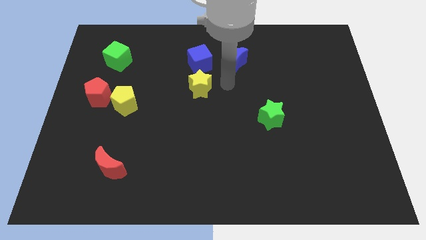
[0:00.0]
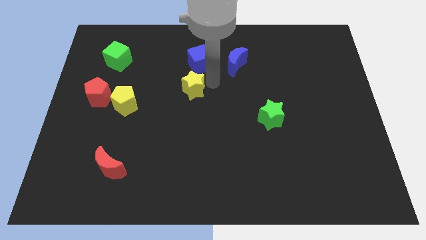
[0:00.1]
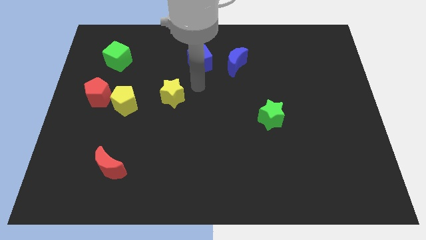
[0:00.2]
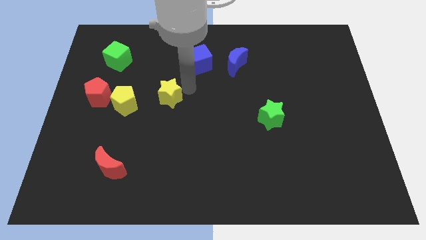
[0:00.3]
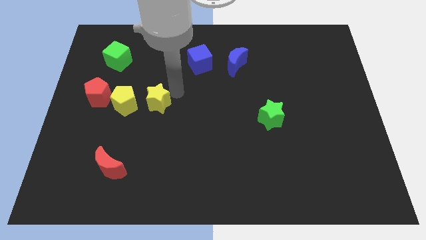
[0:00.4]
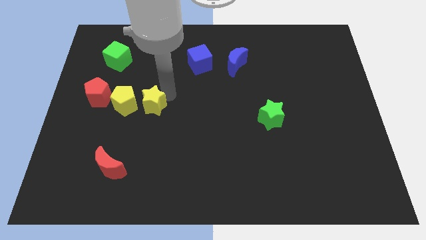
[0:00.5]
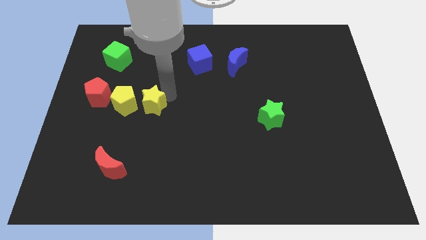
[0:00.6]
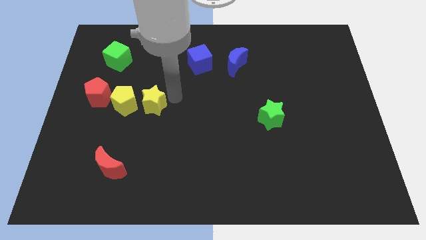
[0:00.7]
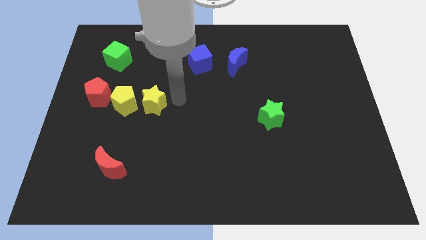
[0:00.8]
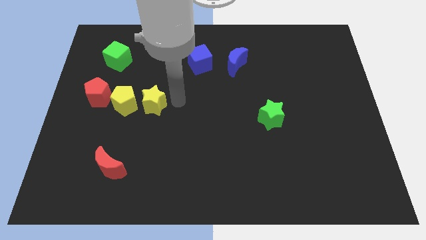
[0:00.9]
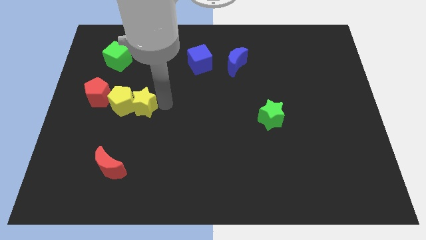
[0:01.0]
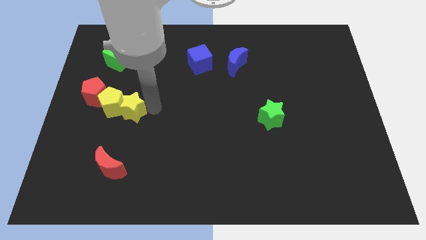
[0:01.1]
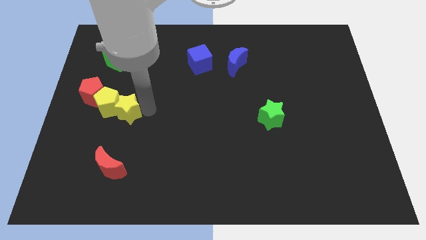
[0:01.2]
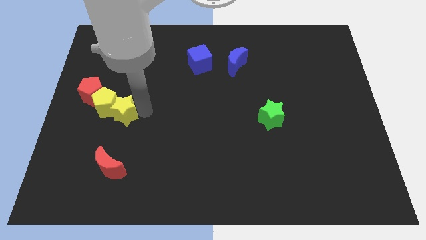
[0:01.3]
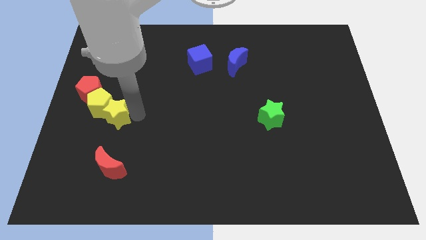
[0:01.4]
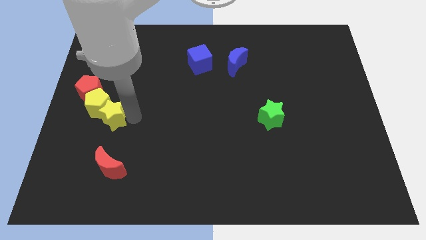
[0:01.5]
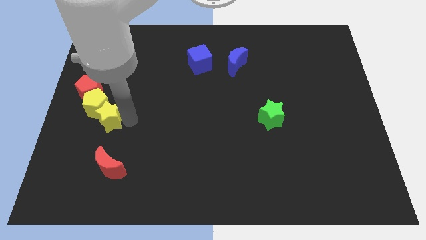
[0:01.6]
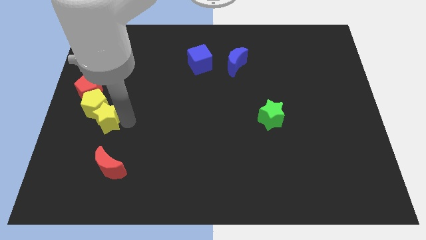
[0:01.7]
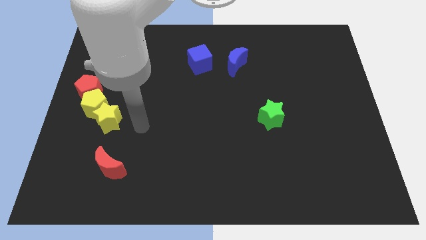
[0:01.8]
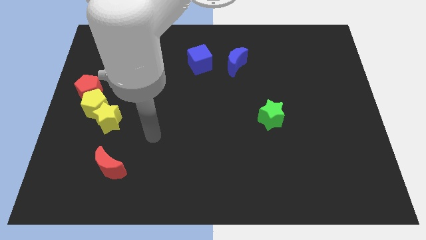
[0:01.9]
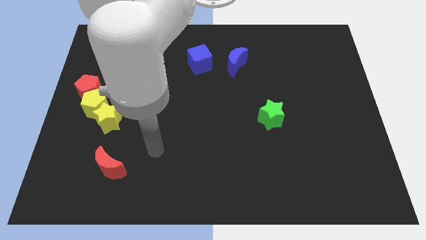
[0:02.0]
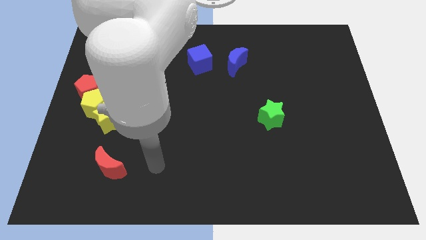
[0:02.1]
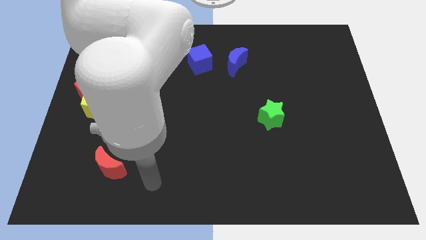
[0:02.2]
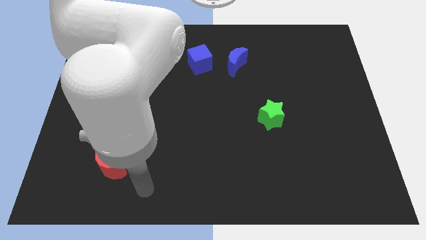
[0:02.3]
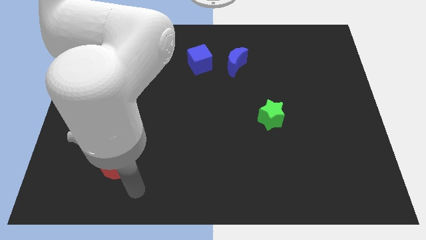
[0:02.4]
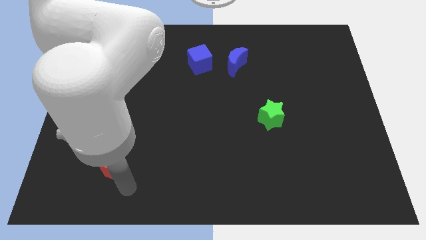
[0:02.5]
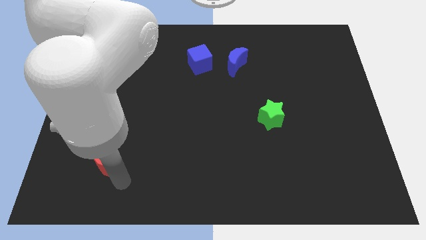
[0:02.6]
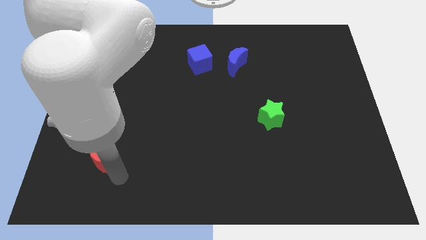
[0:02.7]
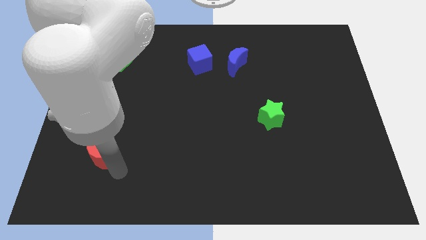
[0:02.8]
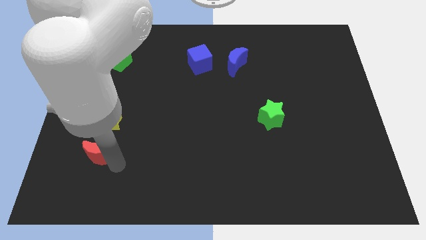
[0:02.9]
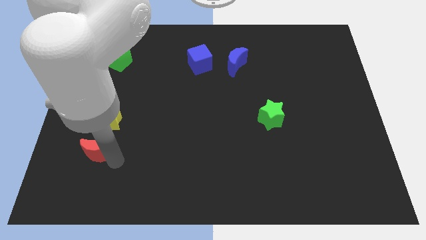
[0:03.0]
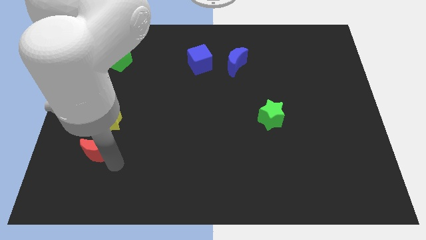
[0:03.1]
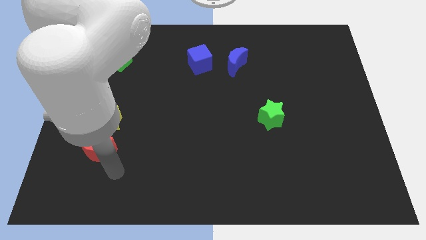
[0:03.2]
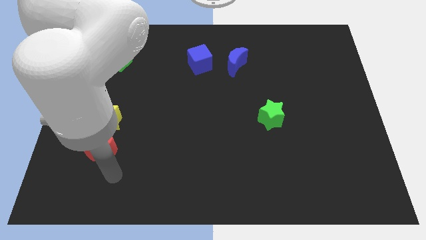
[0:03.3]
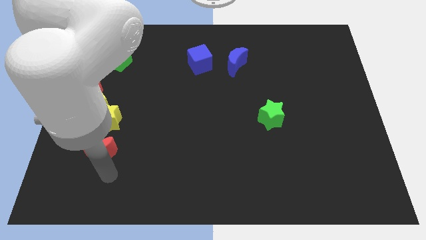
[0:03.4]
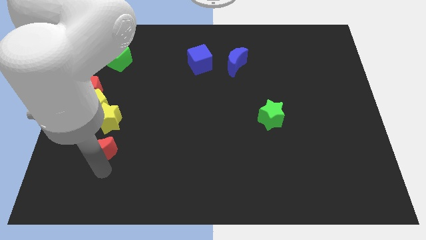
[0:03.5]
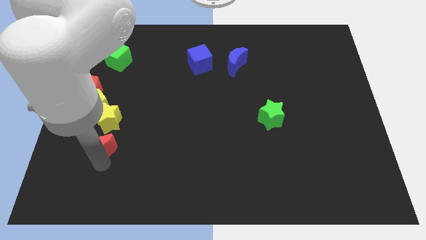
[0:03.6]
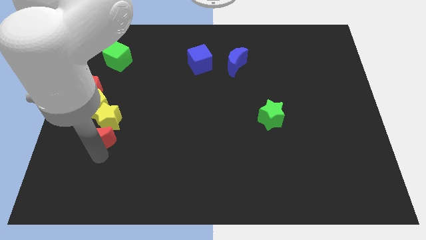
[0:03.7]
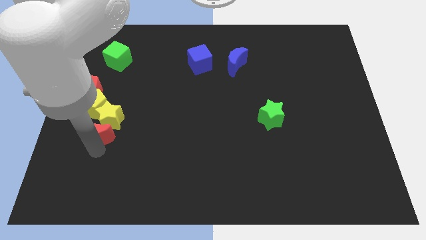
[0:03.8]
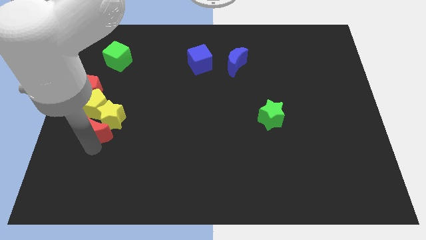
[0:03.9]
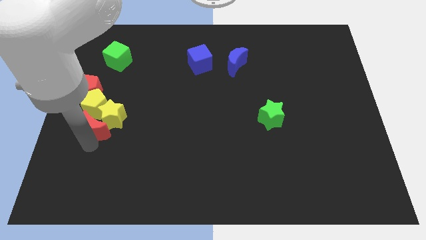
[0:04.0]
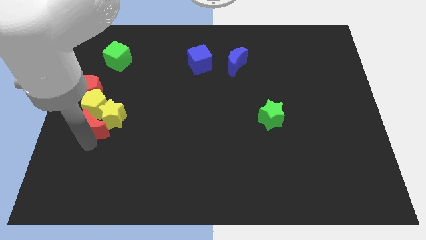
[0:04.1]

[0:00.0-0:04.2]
push the yellow star close to the yellow pentagon

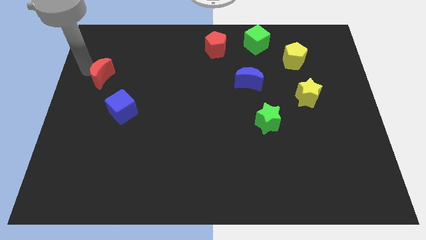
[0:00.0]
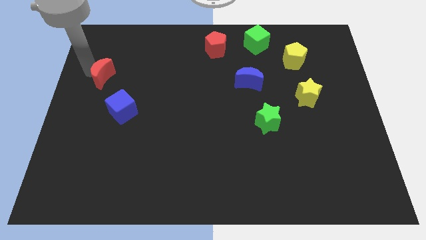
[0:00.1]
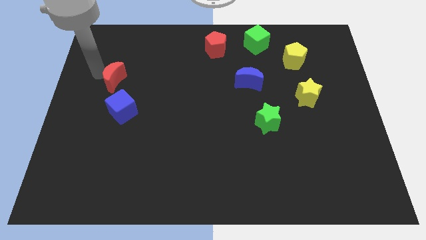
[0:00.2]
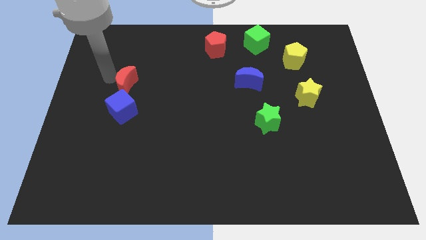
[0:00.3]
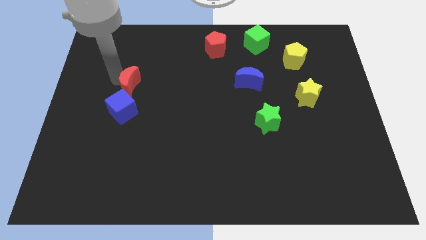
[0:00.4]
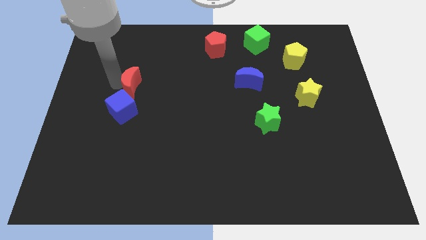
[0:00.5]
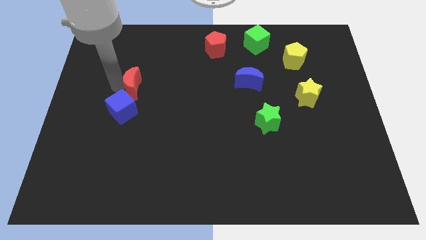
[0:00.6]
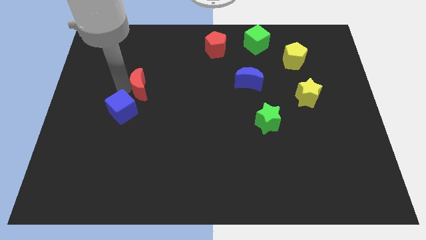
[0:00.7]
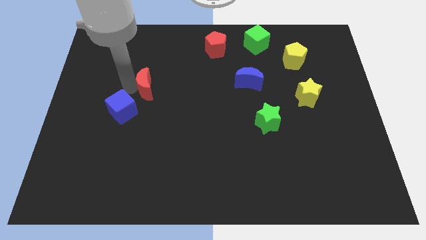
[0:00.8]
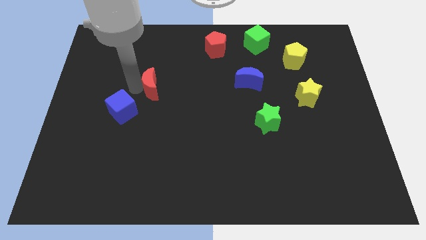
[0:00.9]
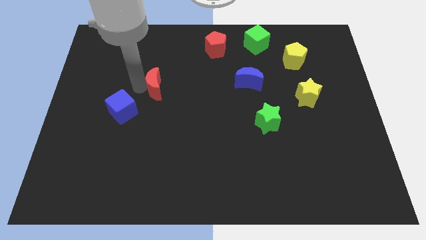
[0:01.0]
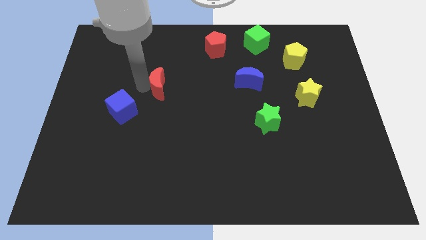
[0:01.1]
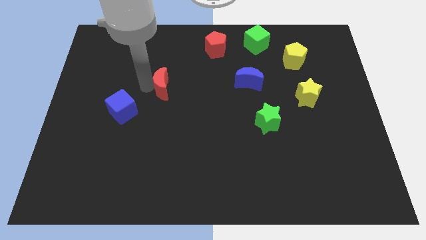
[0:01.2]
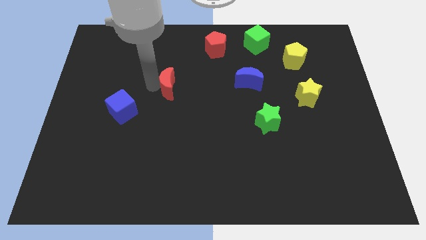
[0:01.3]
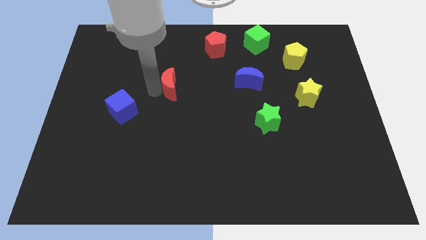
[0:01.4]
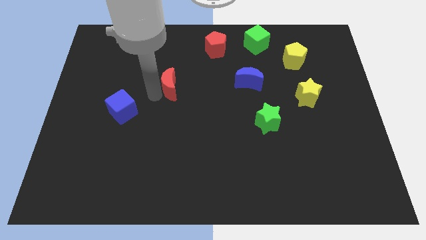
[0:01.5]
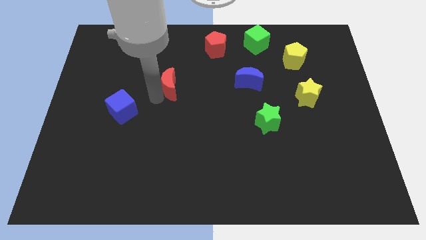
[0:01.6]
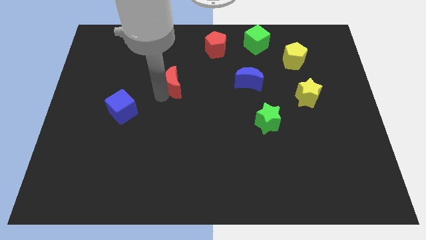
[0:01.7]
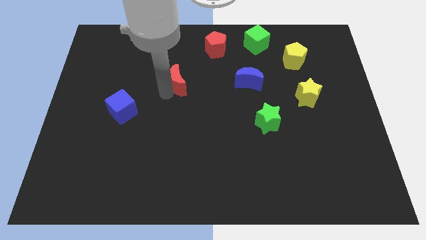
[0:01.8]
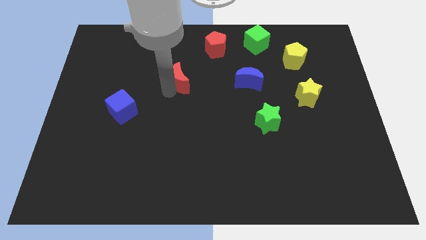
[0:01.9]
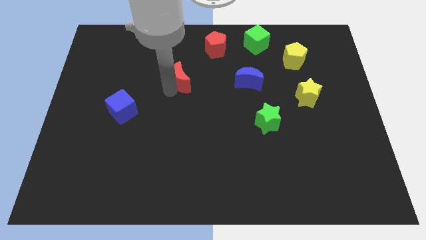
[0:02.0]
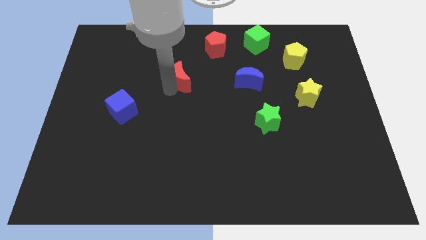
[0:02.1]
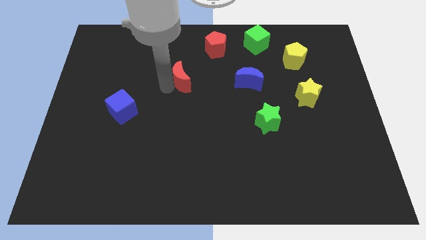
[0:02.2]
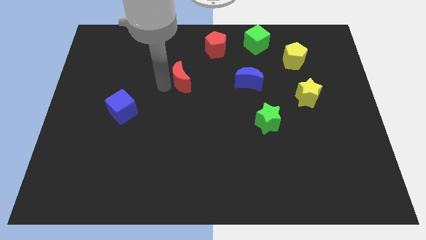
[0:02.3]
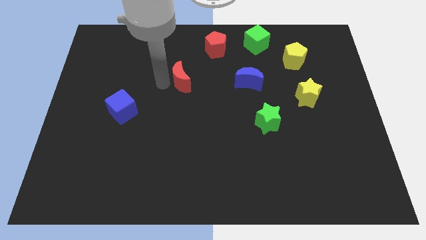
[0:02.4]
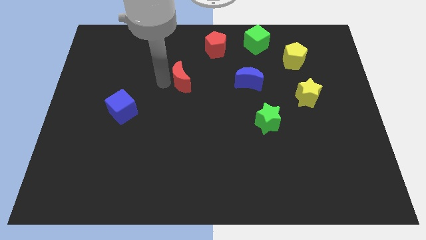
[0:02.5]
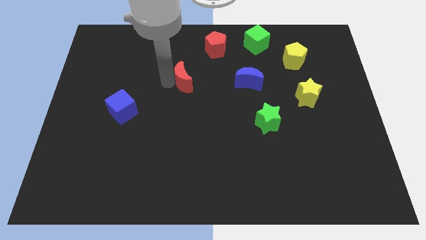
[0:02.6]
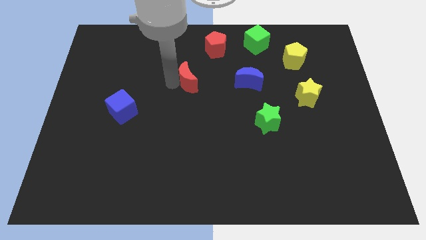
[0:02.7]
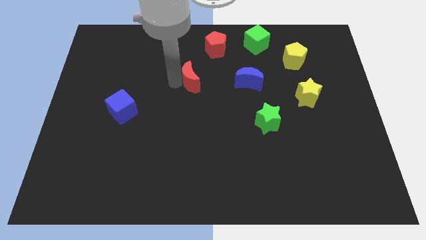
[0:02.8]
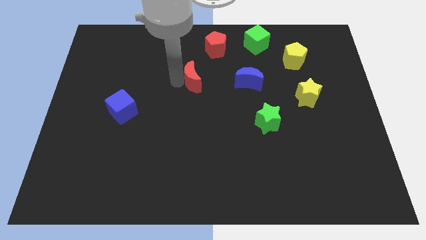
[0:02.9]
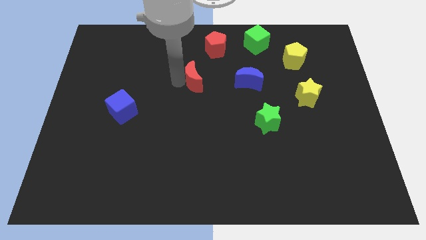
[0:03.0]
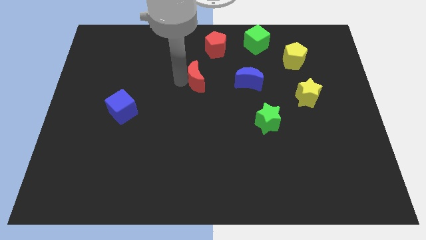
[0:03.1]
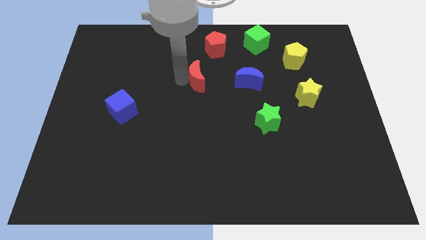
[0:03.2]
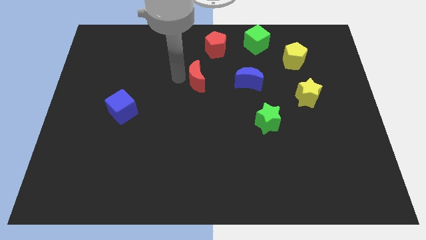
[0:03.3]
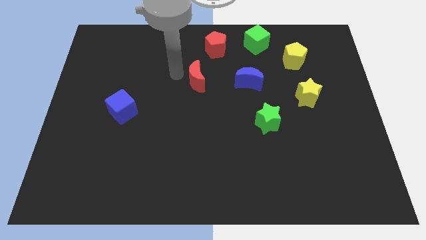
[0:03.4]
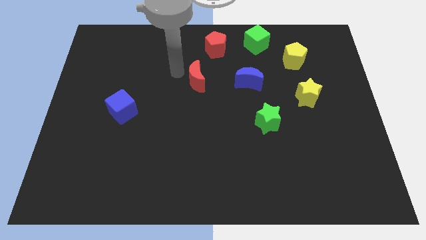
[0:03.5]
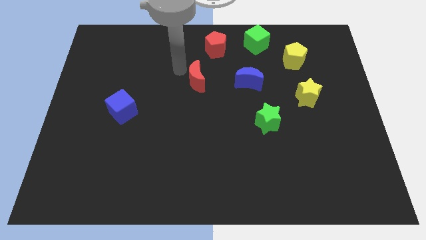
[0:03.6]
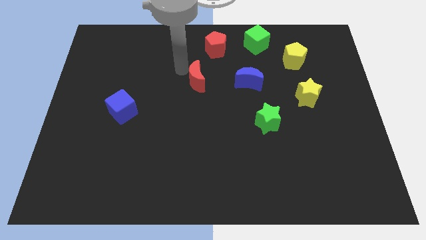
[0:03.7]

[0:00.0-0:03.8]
place the red moon horizontally to the left side of the blue moon

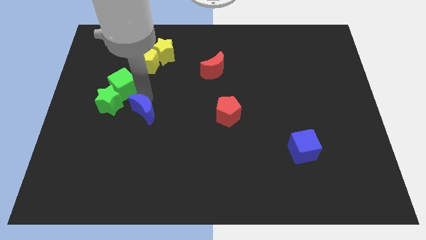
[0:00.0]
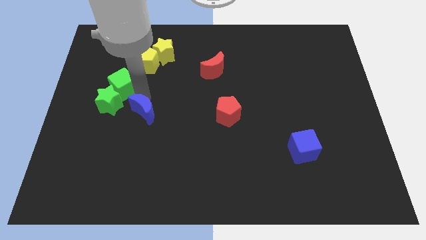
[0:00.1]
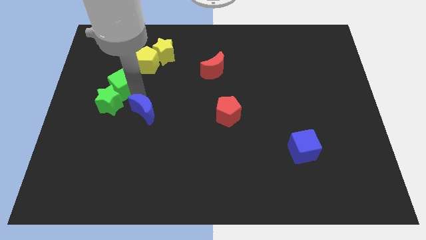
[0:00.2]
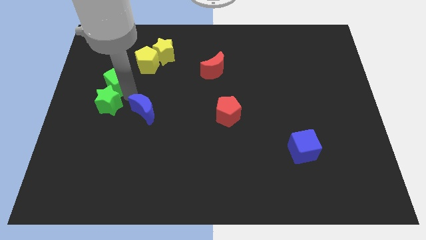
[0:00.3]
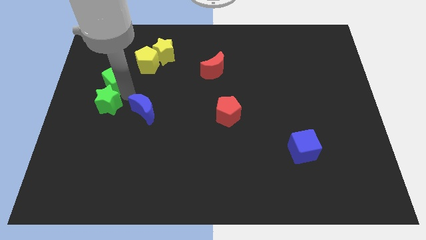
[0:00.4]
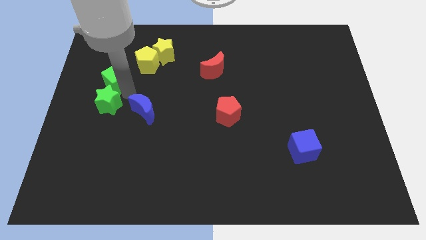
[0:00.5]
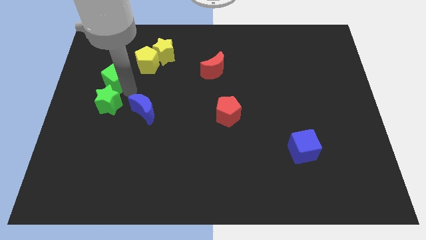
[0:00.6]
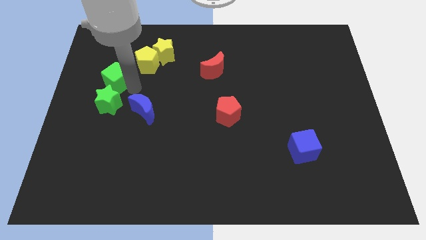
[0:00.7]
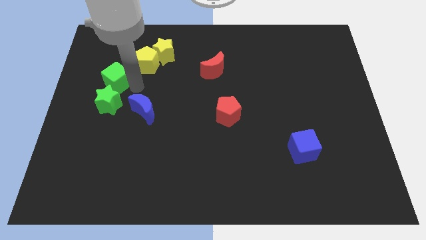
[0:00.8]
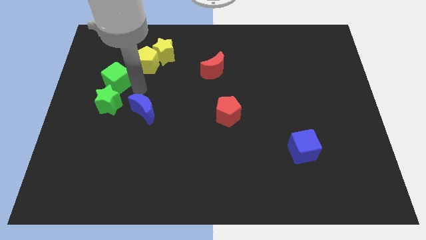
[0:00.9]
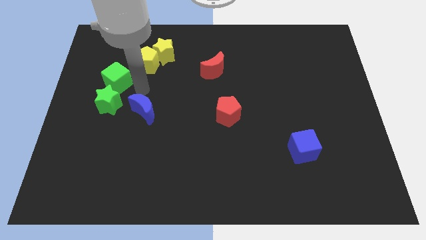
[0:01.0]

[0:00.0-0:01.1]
push green cube on left side slightly
